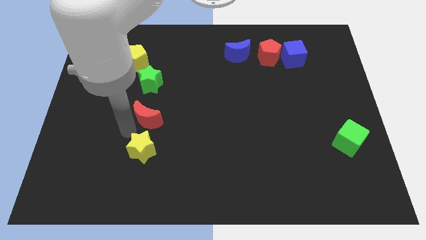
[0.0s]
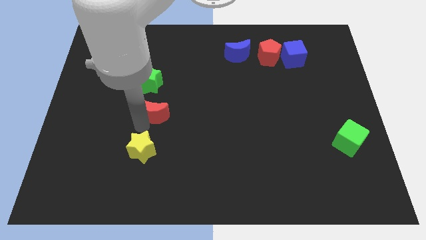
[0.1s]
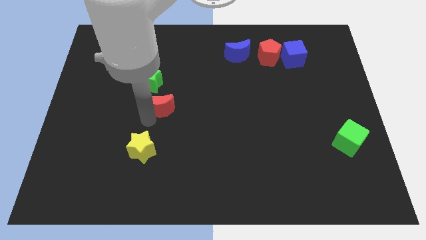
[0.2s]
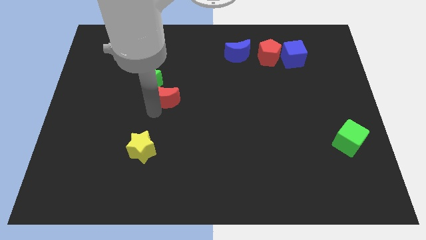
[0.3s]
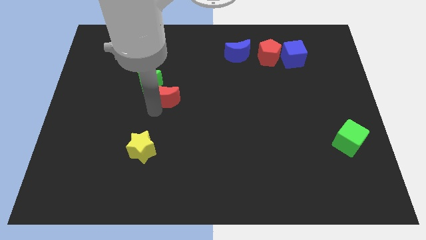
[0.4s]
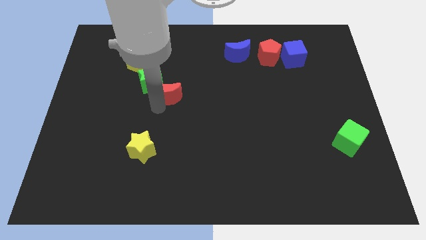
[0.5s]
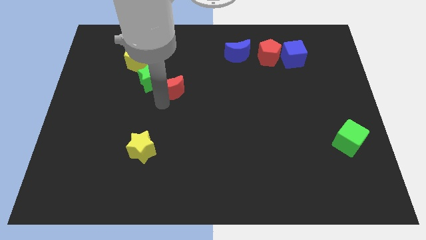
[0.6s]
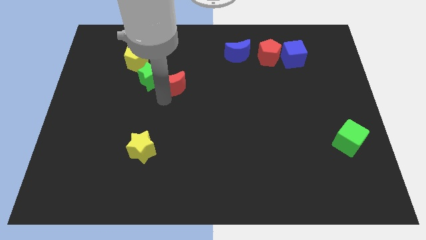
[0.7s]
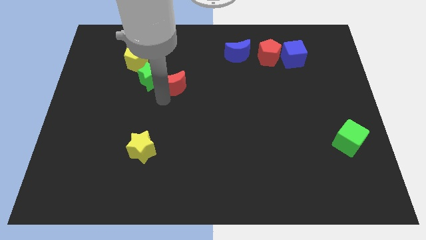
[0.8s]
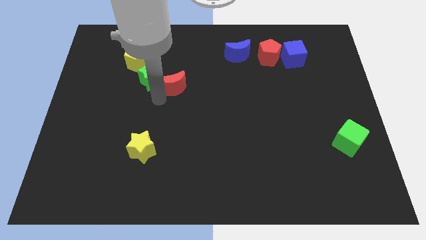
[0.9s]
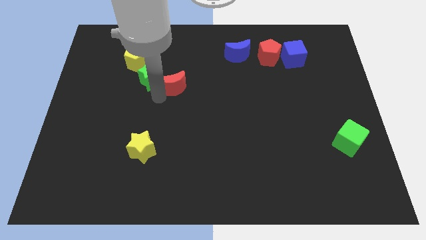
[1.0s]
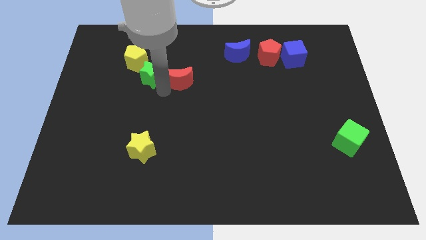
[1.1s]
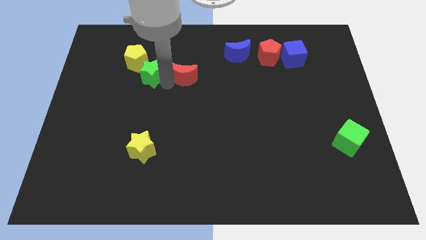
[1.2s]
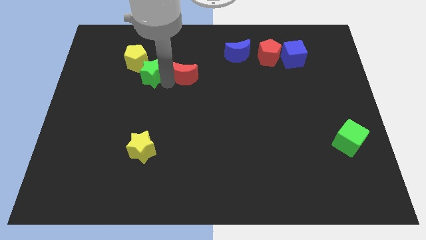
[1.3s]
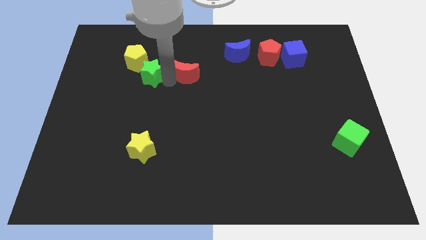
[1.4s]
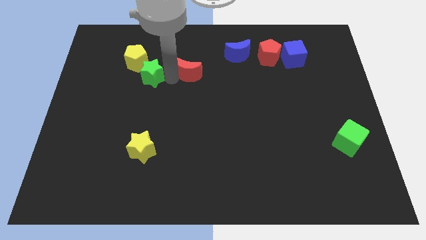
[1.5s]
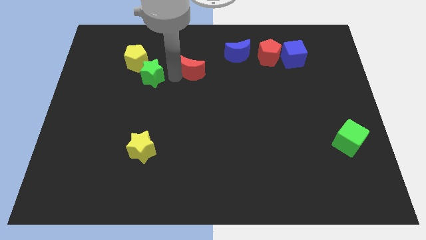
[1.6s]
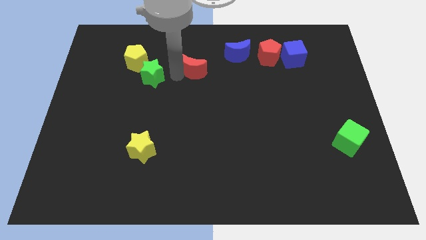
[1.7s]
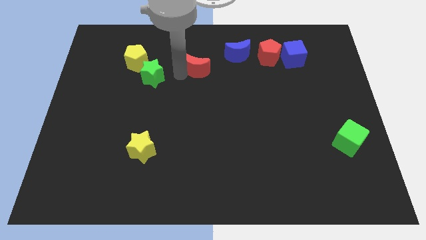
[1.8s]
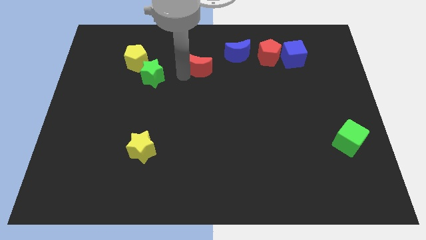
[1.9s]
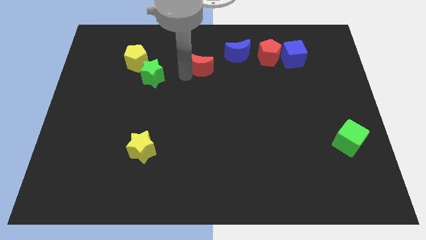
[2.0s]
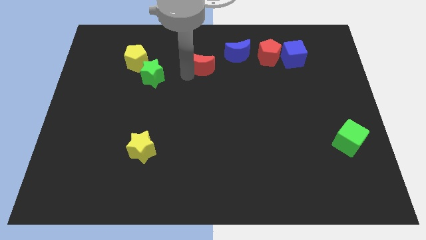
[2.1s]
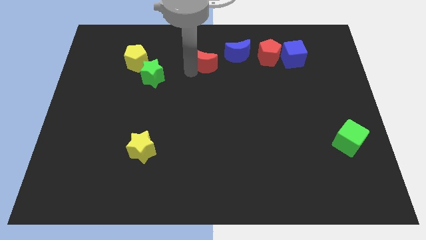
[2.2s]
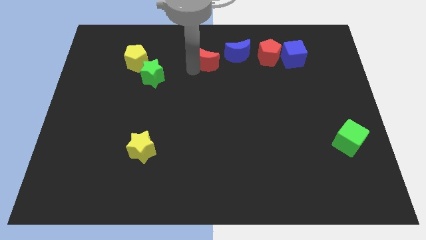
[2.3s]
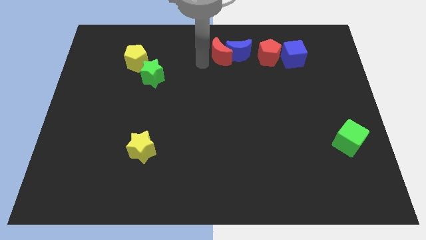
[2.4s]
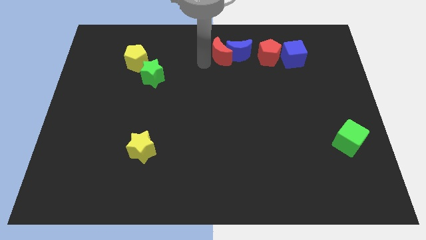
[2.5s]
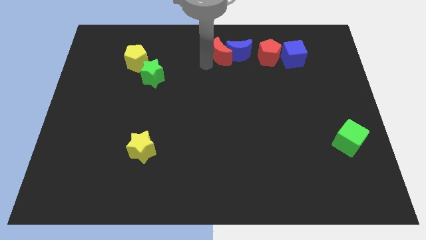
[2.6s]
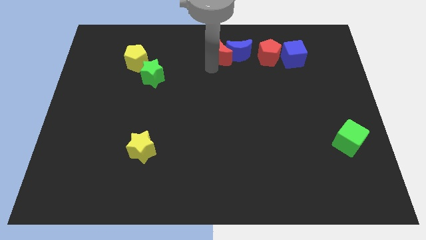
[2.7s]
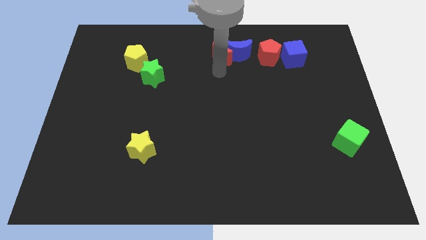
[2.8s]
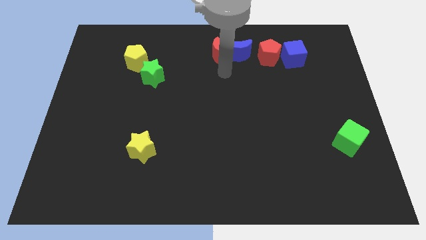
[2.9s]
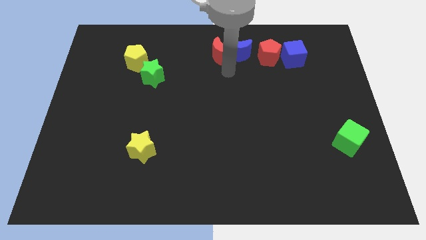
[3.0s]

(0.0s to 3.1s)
put the red moon and blue moon together

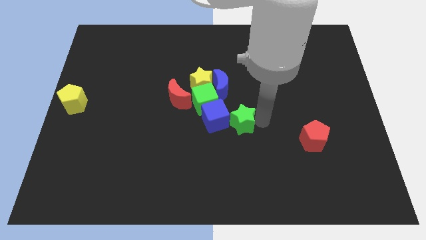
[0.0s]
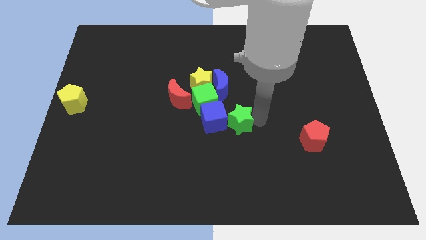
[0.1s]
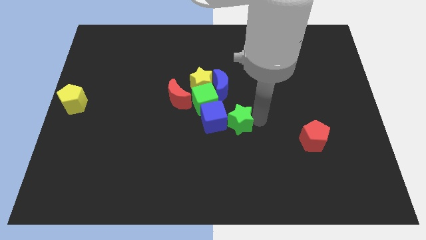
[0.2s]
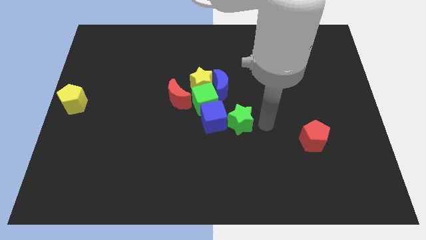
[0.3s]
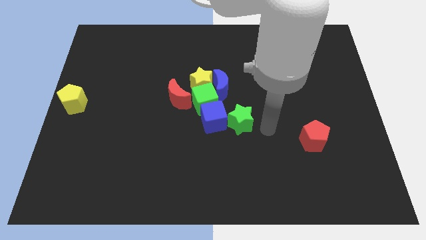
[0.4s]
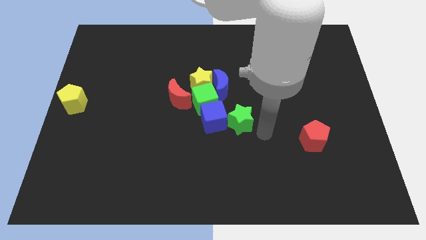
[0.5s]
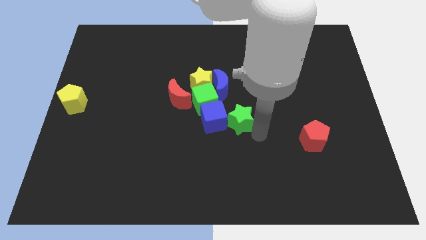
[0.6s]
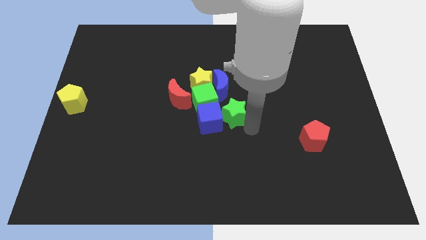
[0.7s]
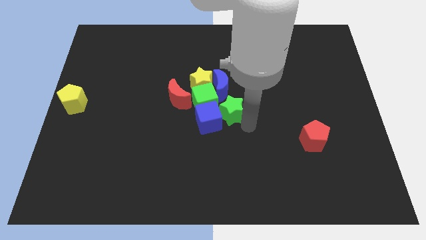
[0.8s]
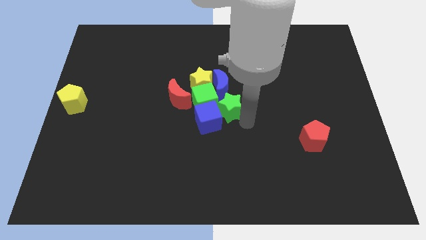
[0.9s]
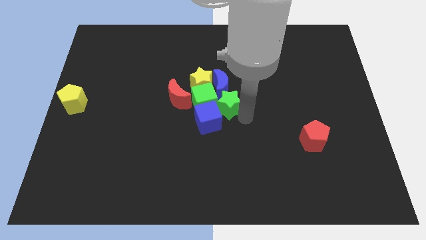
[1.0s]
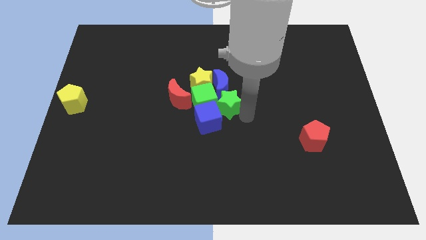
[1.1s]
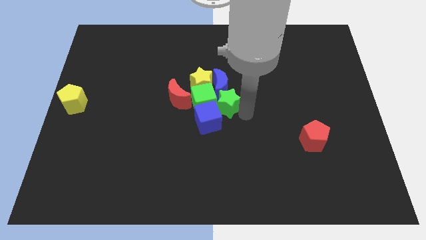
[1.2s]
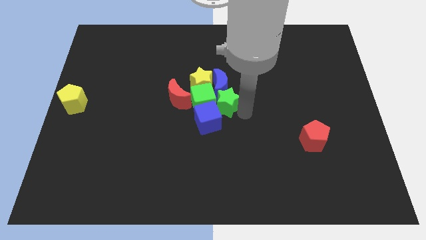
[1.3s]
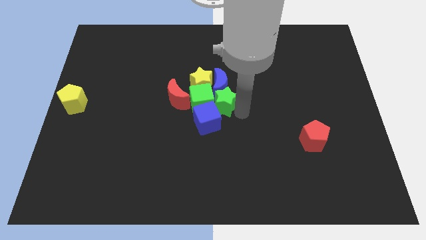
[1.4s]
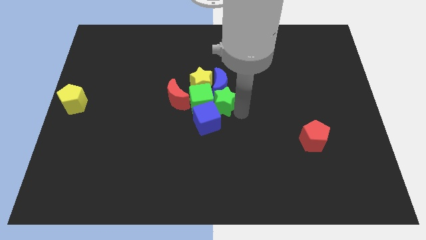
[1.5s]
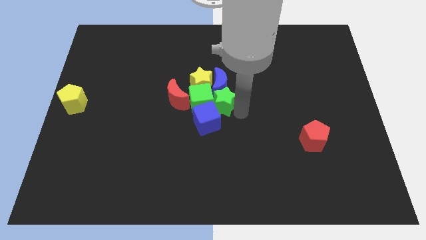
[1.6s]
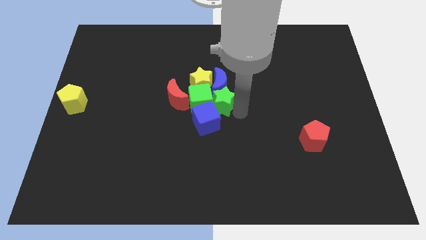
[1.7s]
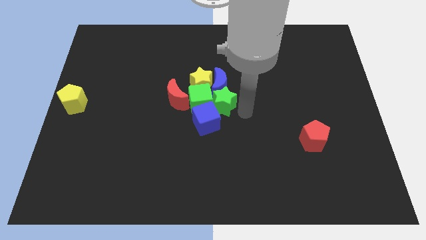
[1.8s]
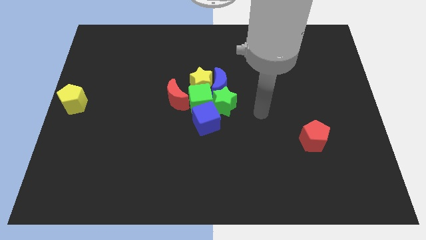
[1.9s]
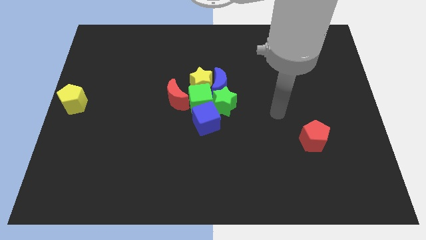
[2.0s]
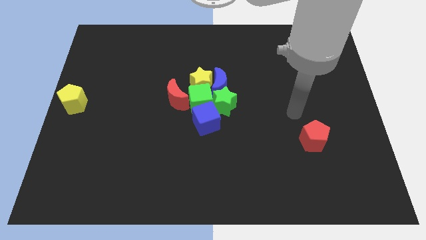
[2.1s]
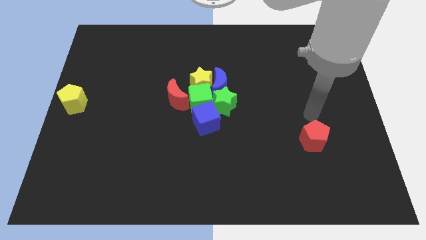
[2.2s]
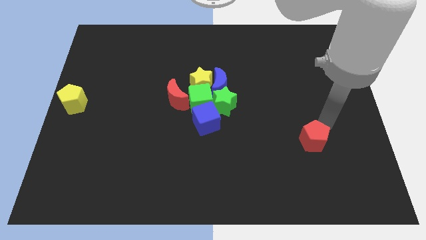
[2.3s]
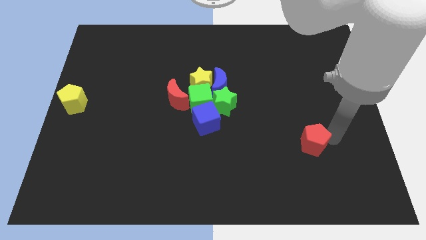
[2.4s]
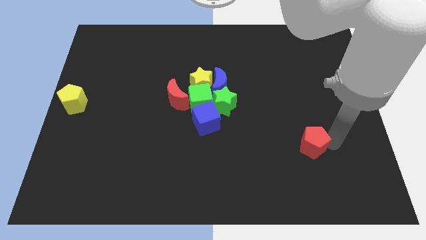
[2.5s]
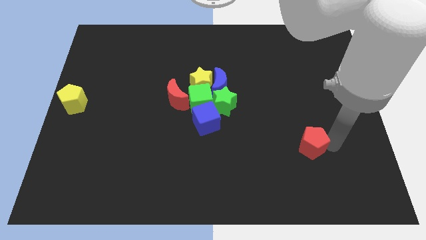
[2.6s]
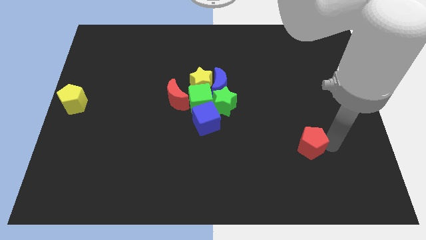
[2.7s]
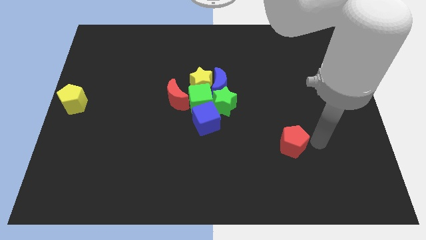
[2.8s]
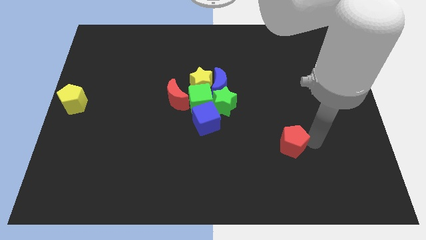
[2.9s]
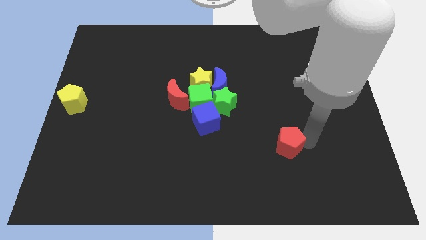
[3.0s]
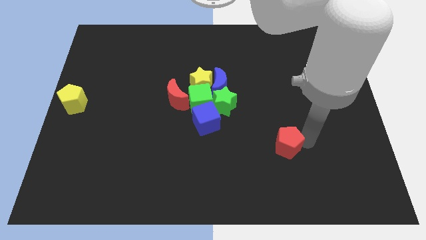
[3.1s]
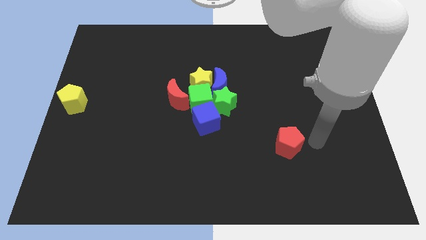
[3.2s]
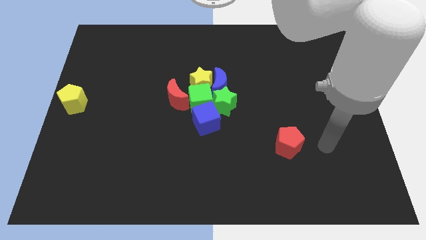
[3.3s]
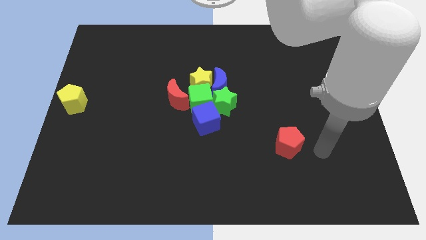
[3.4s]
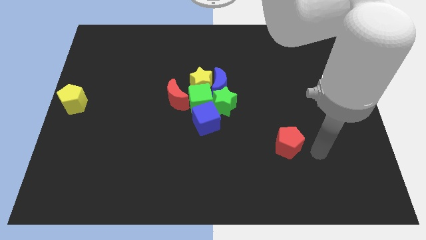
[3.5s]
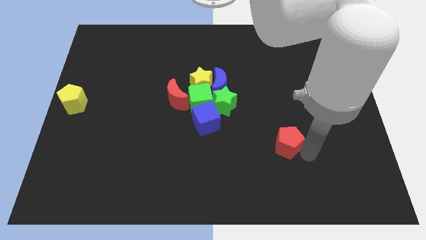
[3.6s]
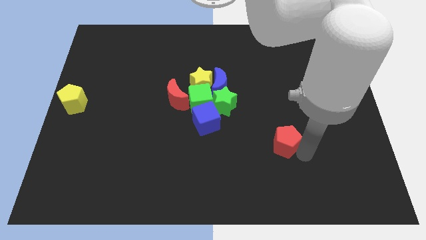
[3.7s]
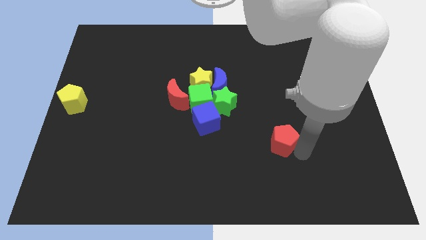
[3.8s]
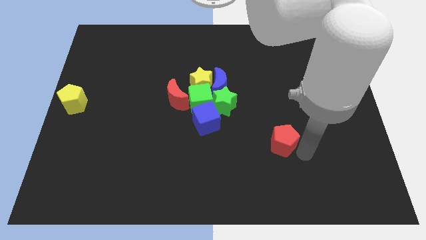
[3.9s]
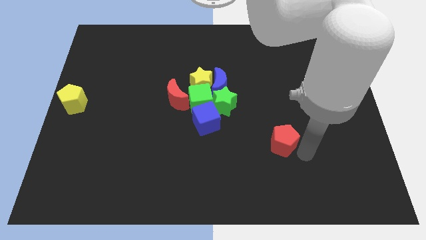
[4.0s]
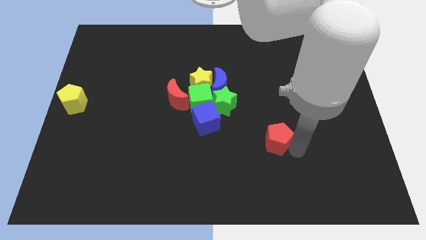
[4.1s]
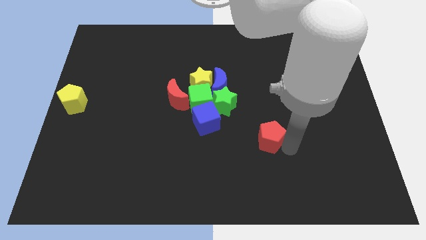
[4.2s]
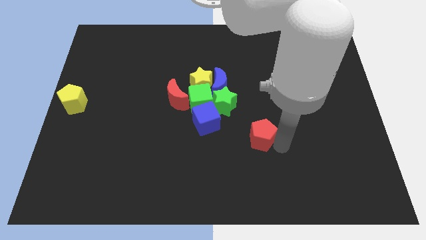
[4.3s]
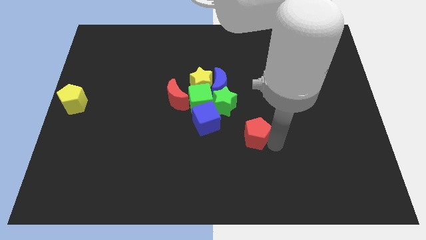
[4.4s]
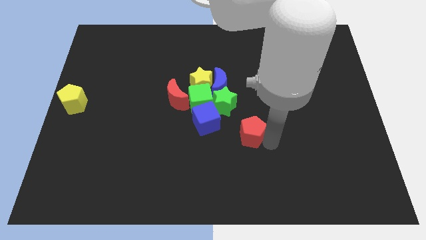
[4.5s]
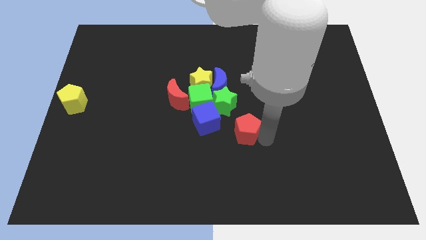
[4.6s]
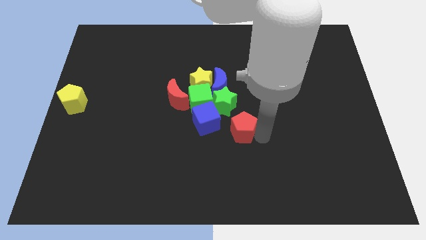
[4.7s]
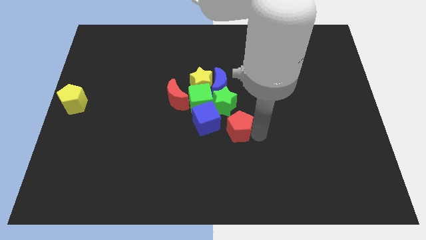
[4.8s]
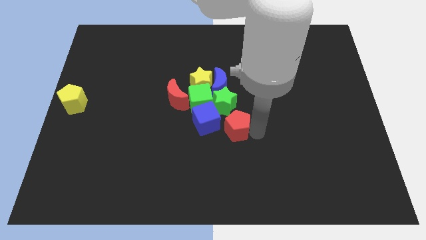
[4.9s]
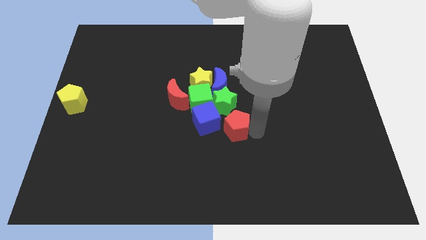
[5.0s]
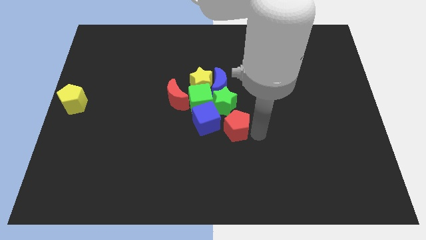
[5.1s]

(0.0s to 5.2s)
push the red pentagon to the right side of blue square

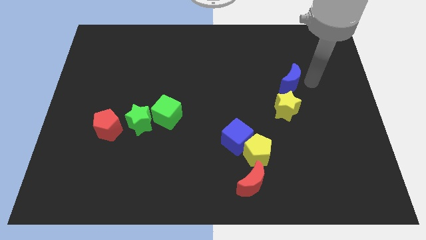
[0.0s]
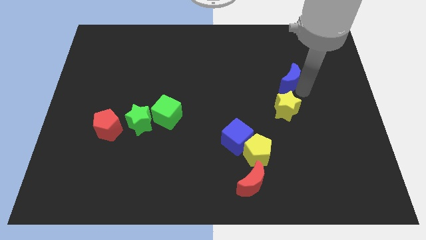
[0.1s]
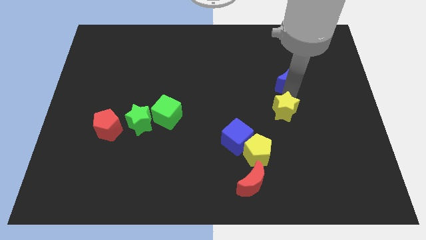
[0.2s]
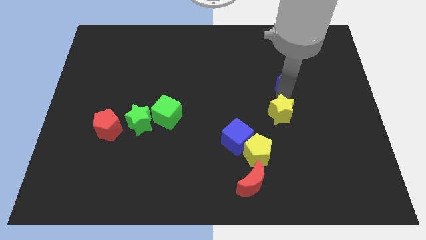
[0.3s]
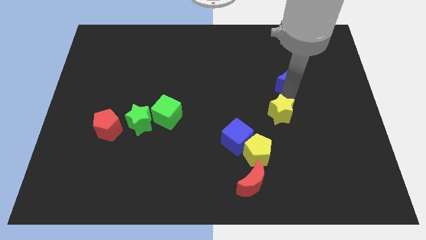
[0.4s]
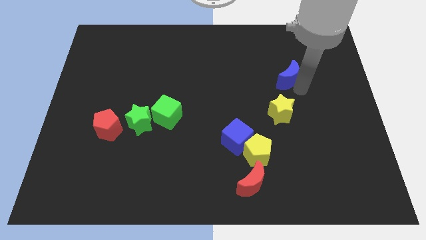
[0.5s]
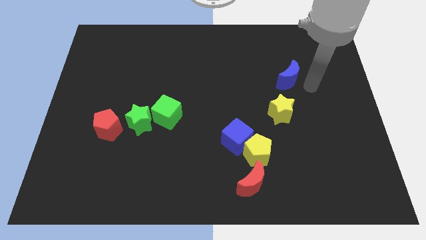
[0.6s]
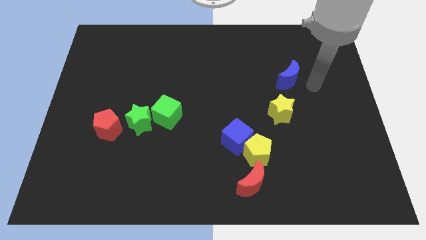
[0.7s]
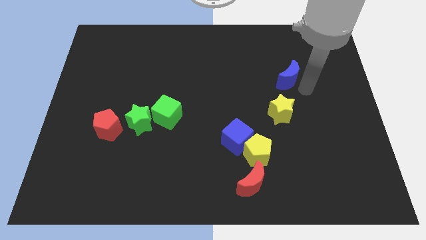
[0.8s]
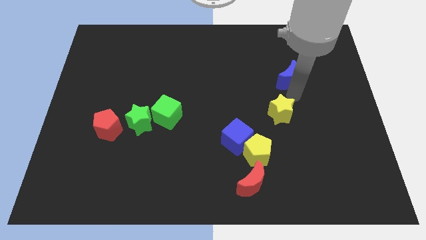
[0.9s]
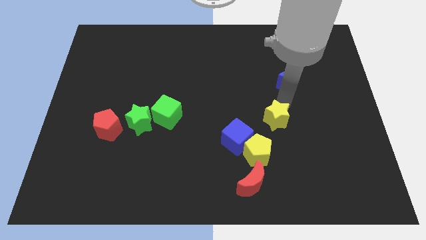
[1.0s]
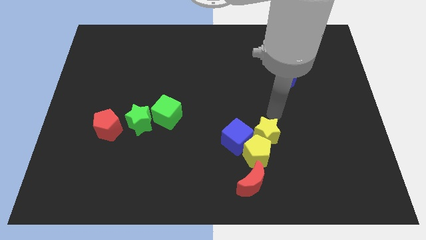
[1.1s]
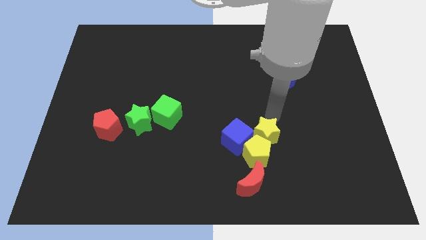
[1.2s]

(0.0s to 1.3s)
move yellow star to the top of yellow pentagon
